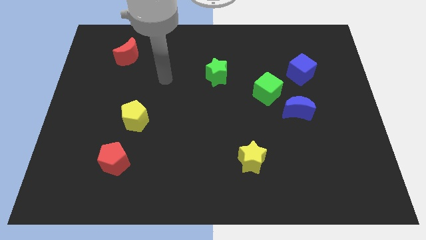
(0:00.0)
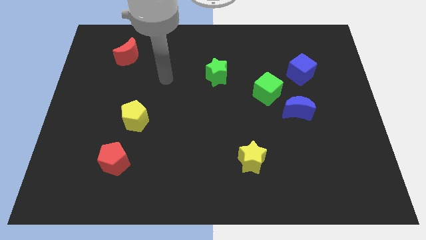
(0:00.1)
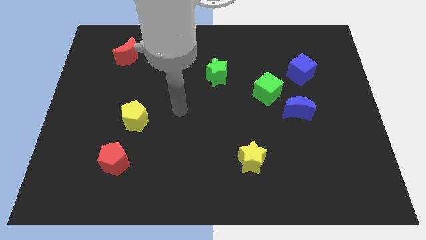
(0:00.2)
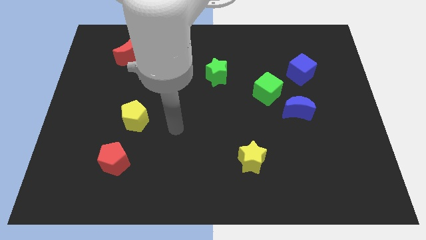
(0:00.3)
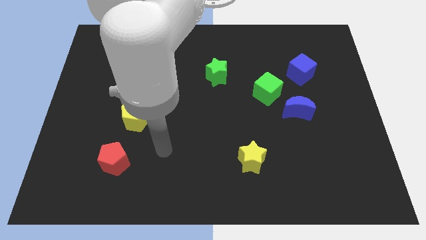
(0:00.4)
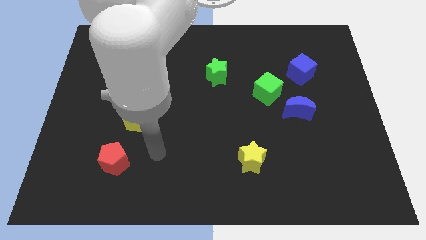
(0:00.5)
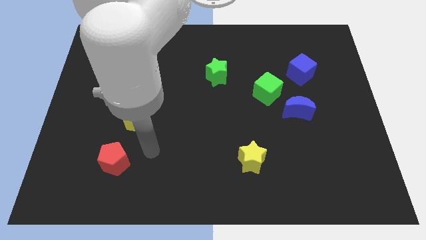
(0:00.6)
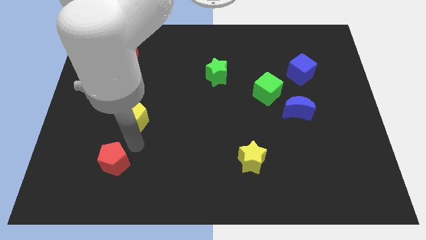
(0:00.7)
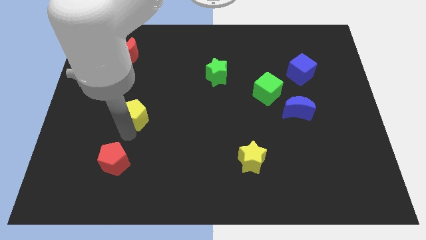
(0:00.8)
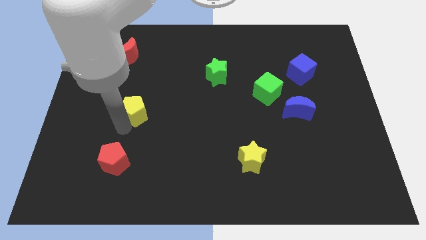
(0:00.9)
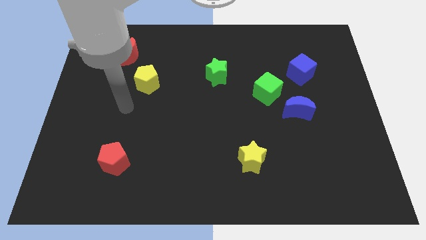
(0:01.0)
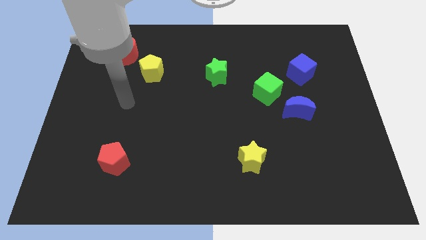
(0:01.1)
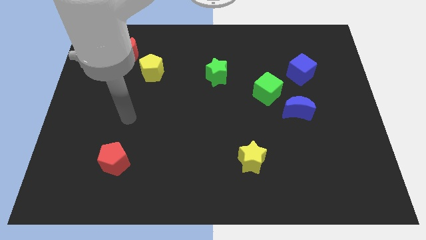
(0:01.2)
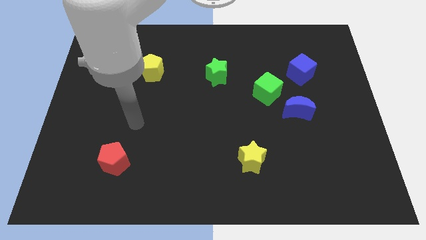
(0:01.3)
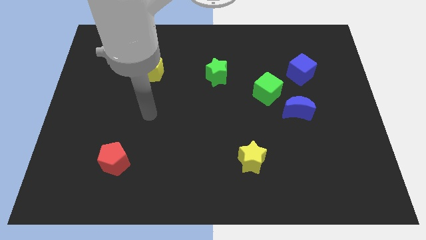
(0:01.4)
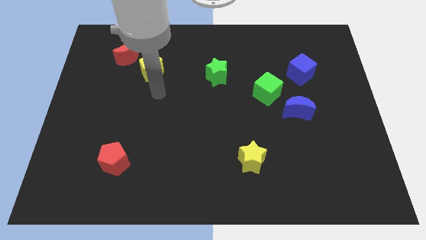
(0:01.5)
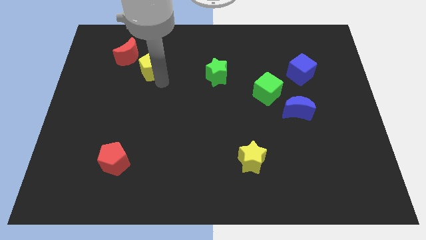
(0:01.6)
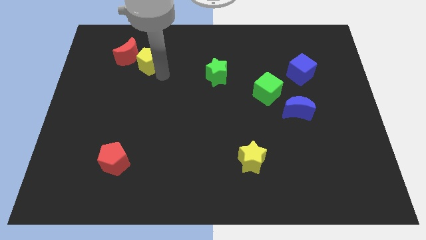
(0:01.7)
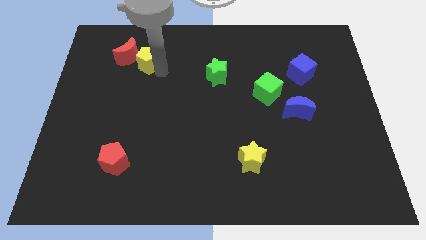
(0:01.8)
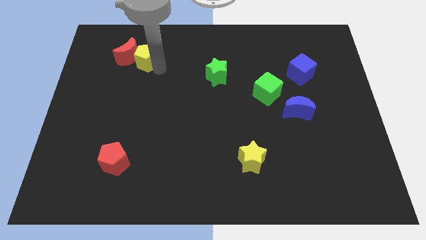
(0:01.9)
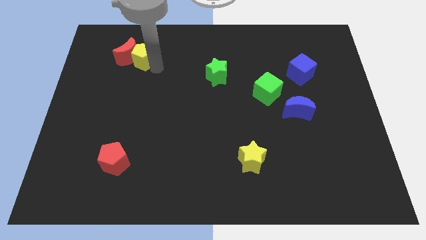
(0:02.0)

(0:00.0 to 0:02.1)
push the yellow pentagon towards the red moon

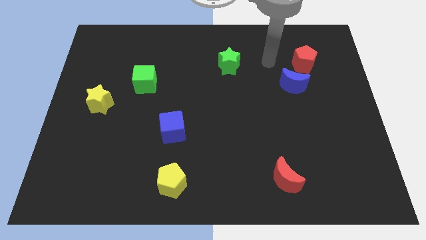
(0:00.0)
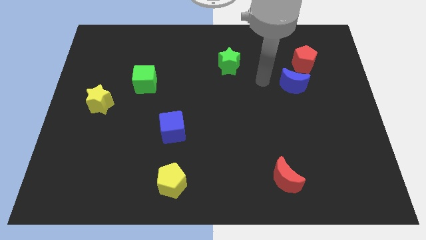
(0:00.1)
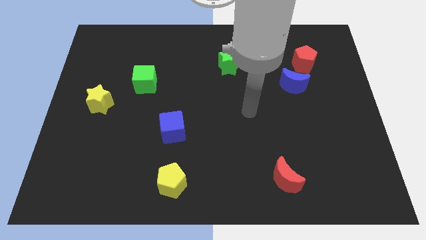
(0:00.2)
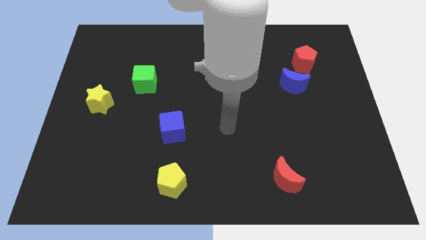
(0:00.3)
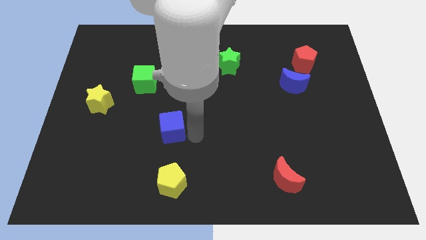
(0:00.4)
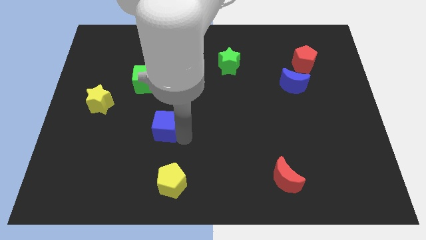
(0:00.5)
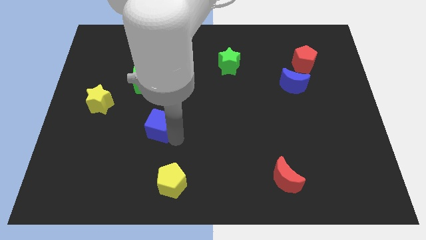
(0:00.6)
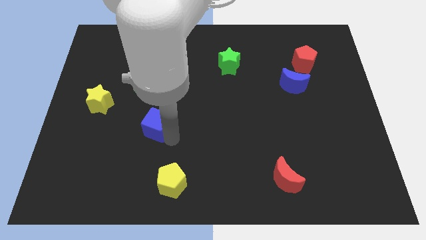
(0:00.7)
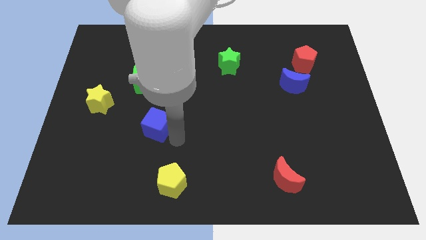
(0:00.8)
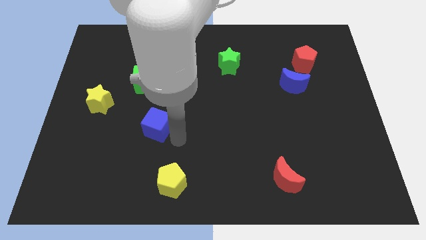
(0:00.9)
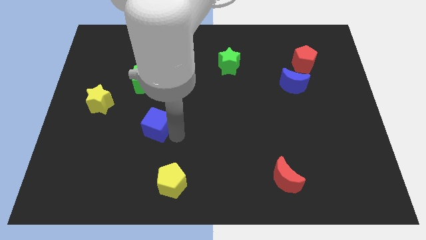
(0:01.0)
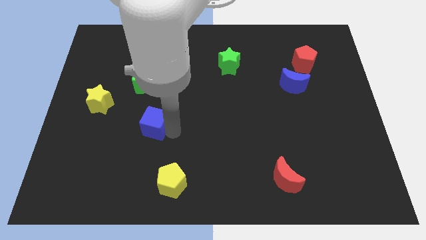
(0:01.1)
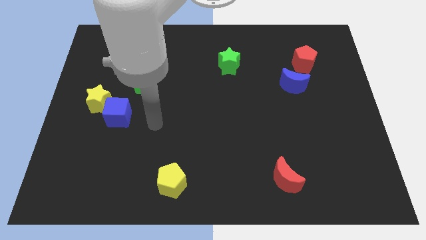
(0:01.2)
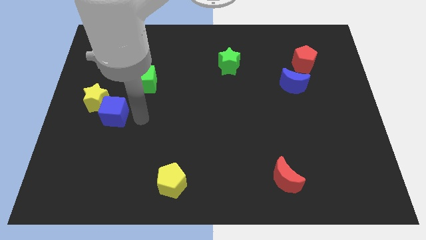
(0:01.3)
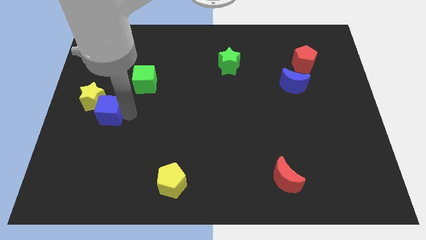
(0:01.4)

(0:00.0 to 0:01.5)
slide the blue cube to the yellow star

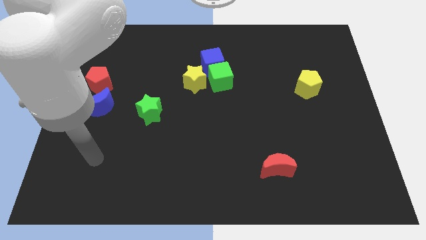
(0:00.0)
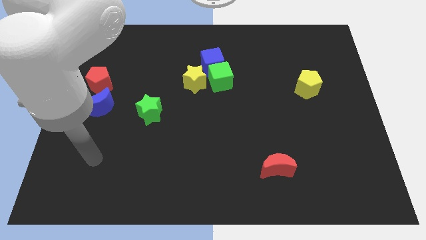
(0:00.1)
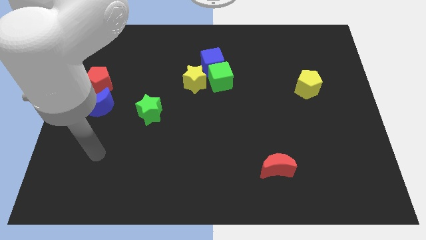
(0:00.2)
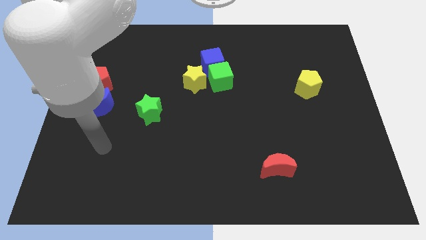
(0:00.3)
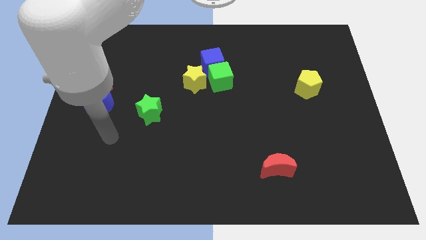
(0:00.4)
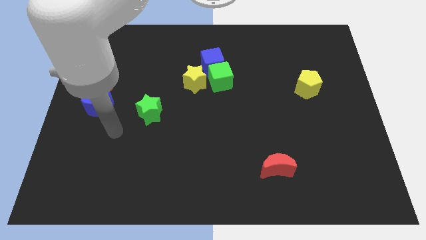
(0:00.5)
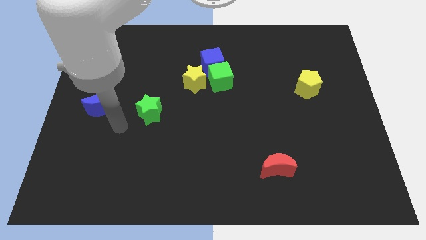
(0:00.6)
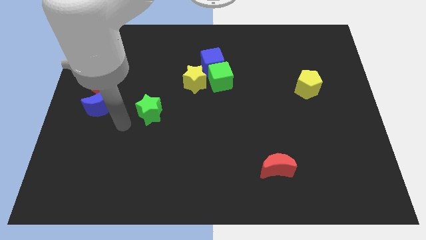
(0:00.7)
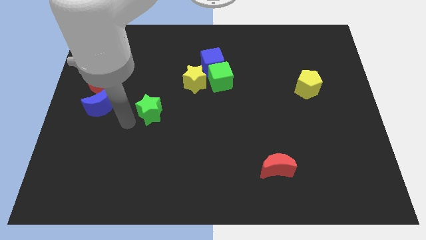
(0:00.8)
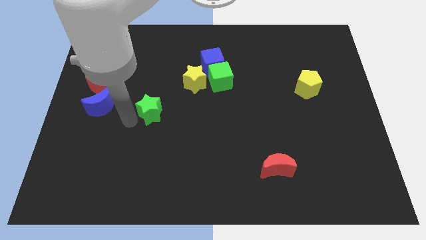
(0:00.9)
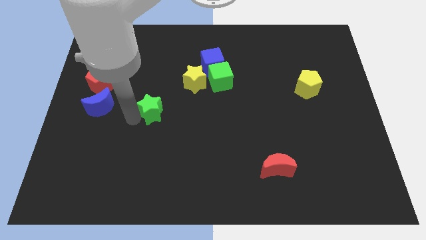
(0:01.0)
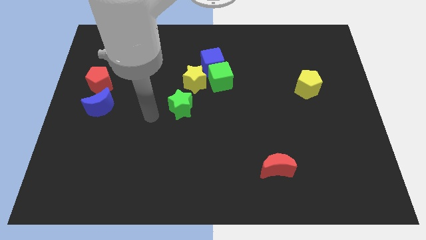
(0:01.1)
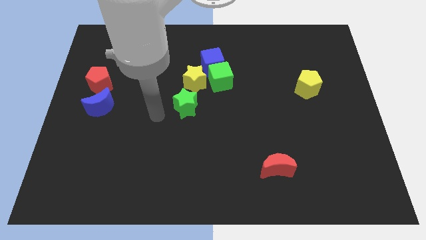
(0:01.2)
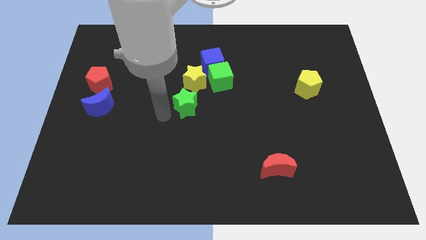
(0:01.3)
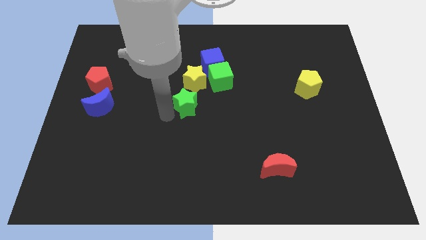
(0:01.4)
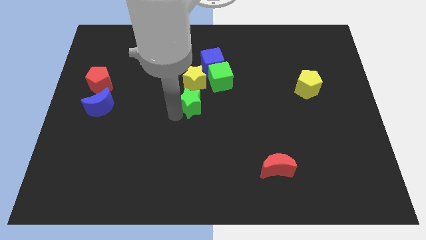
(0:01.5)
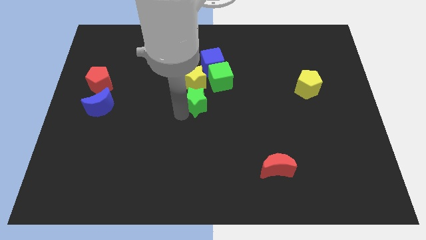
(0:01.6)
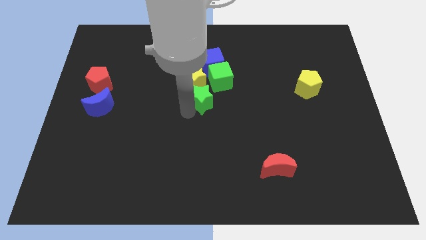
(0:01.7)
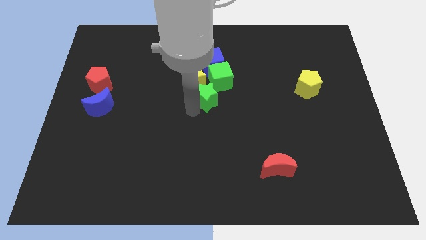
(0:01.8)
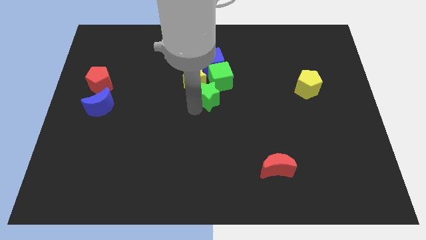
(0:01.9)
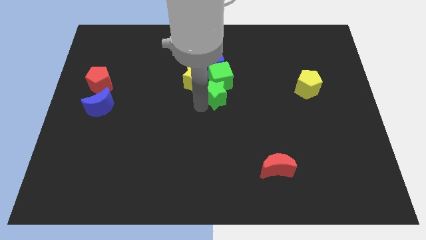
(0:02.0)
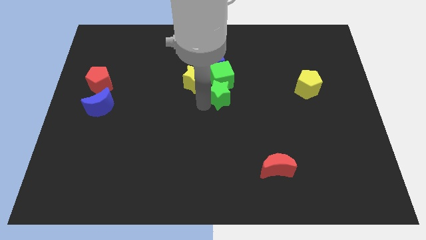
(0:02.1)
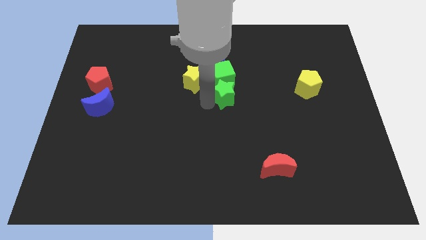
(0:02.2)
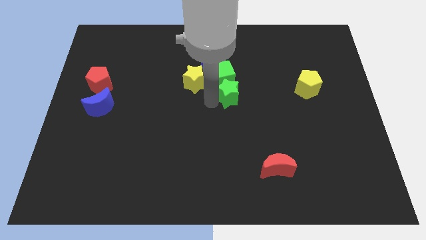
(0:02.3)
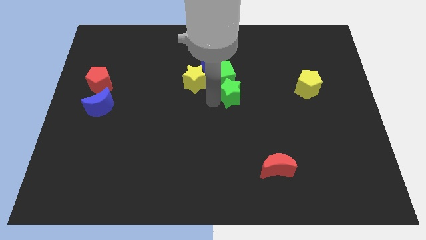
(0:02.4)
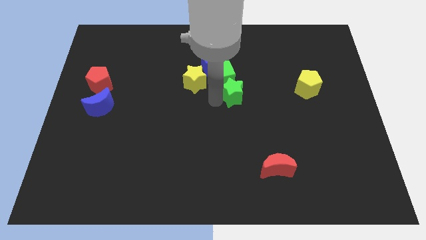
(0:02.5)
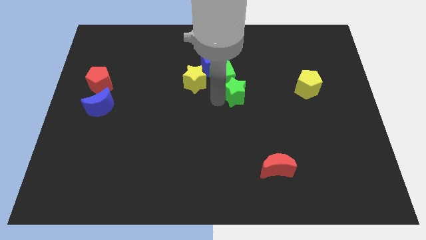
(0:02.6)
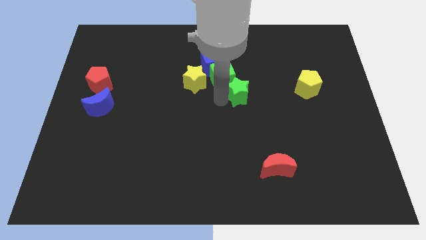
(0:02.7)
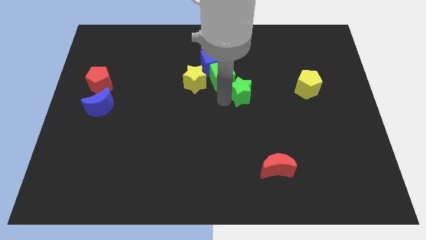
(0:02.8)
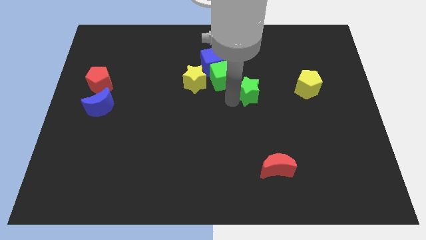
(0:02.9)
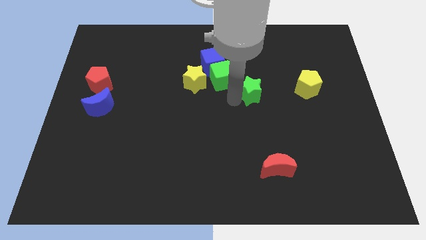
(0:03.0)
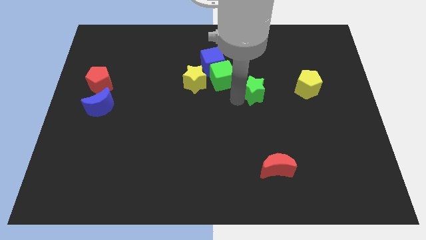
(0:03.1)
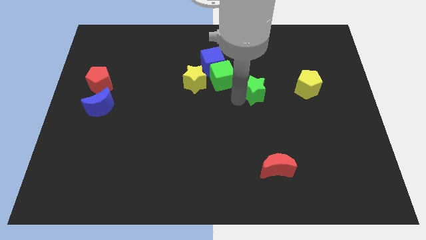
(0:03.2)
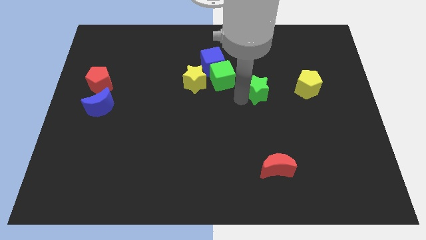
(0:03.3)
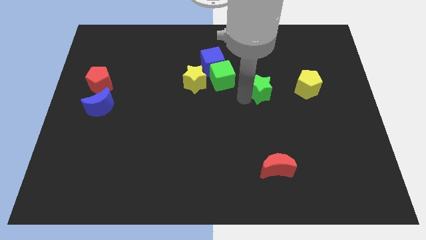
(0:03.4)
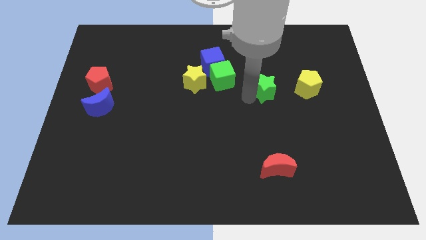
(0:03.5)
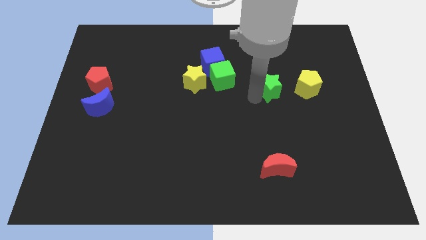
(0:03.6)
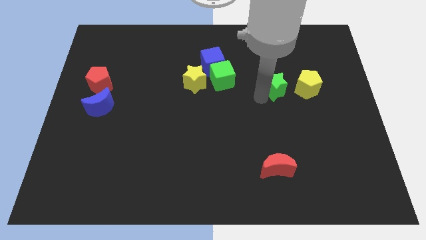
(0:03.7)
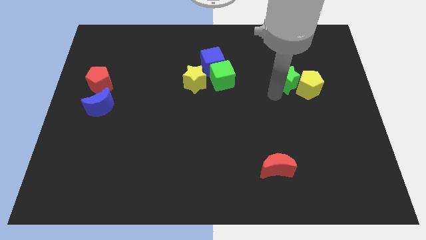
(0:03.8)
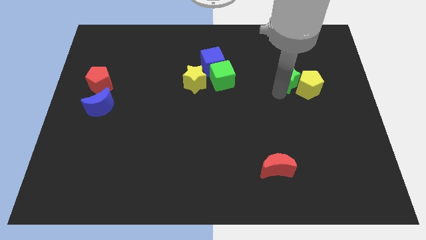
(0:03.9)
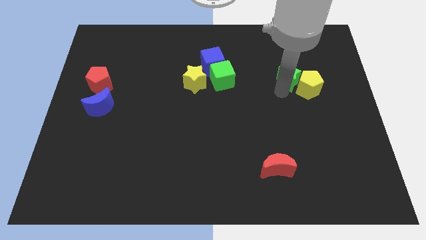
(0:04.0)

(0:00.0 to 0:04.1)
slide the green star next to the yellow pentagon

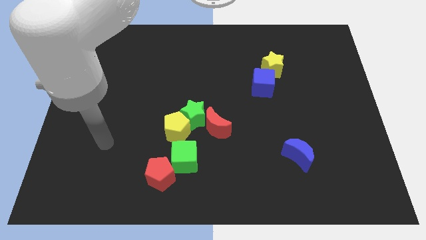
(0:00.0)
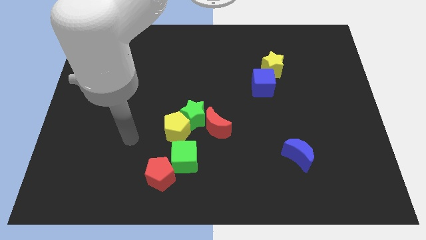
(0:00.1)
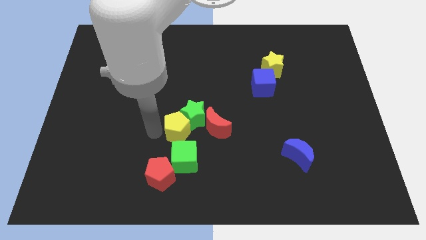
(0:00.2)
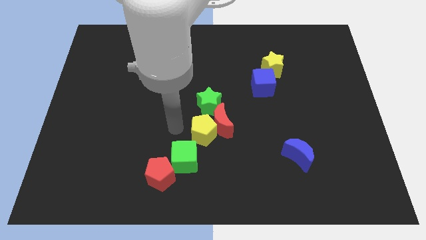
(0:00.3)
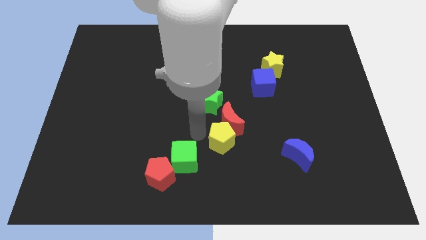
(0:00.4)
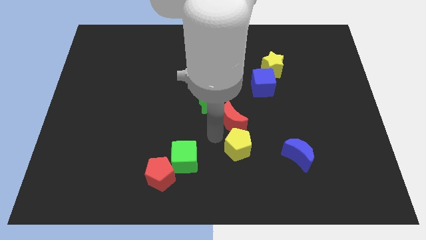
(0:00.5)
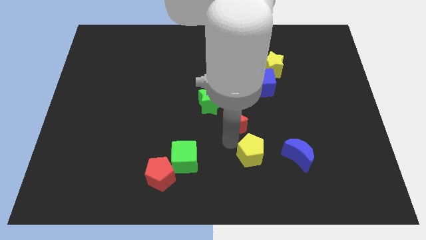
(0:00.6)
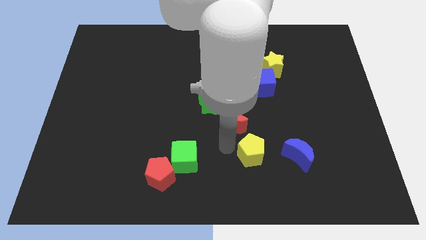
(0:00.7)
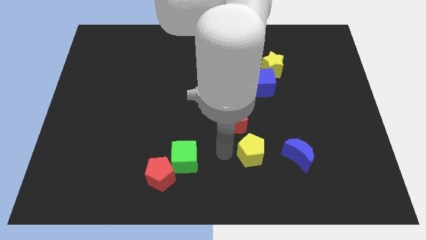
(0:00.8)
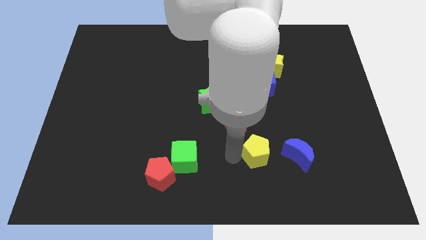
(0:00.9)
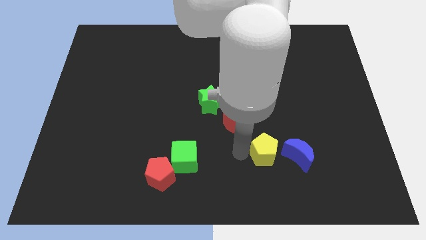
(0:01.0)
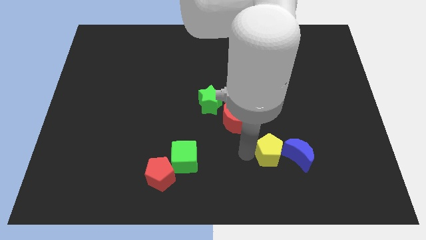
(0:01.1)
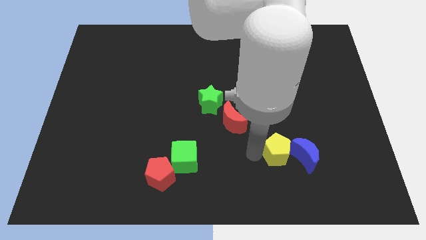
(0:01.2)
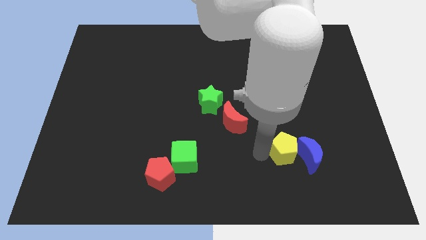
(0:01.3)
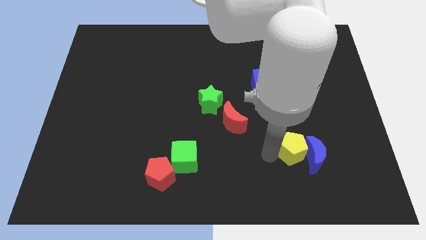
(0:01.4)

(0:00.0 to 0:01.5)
push the yellow pentagon towards the blue moon
